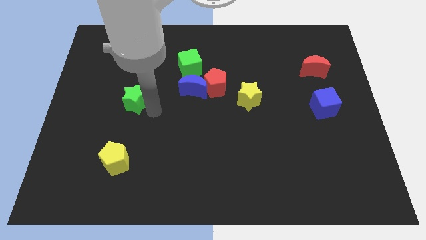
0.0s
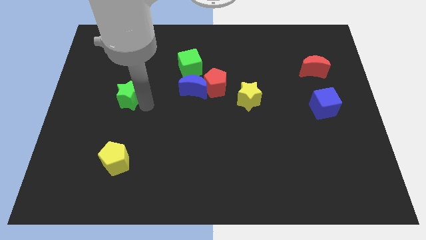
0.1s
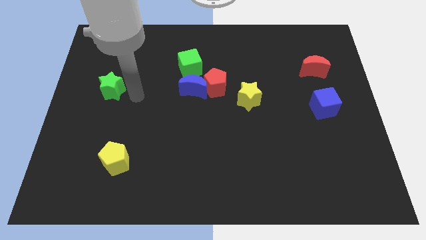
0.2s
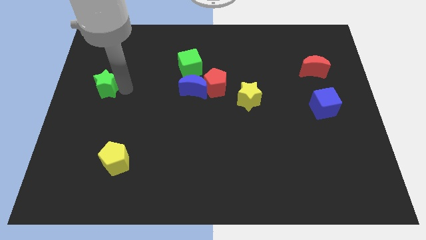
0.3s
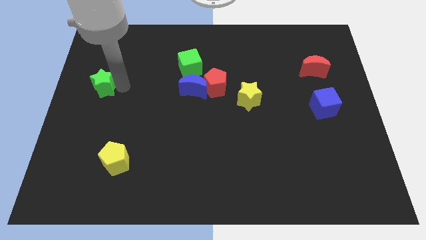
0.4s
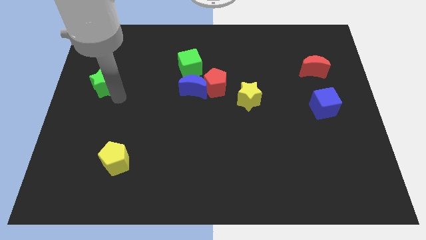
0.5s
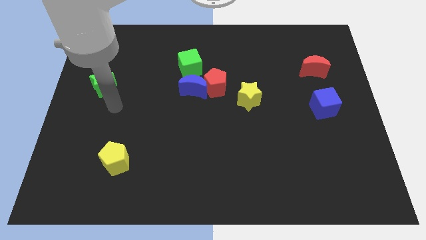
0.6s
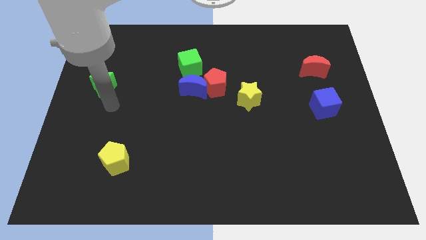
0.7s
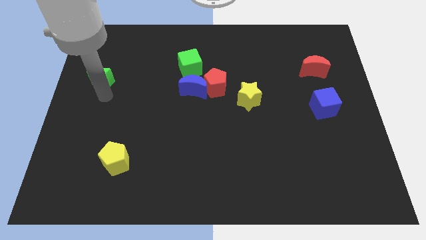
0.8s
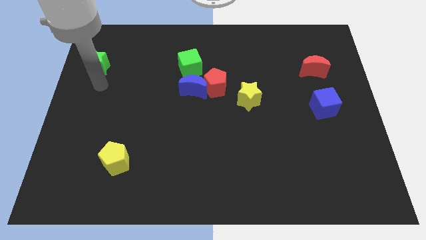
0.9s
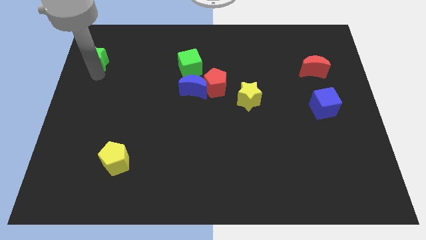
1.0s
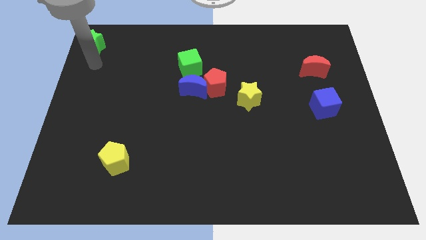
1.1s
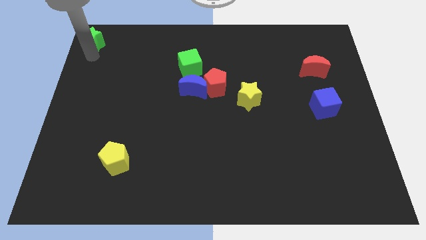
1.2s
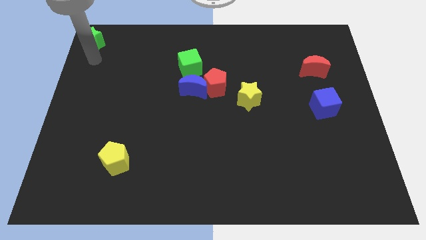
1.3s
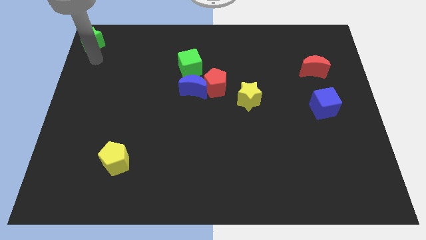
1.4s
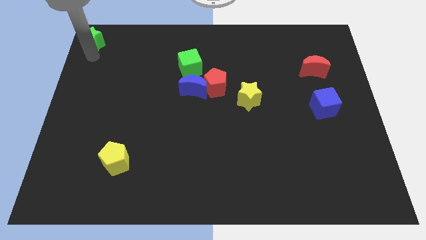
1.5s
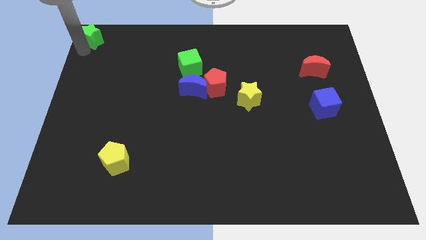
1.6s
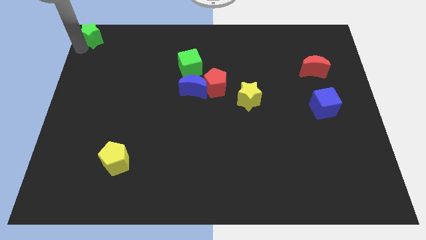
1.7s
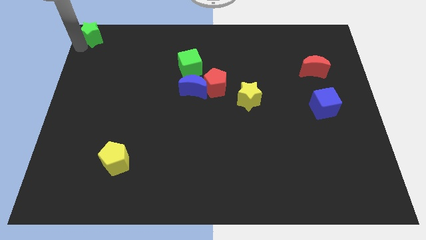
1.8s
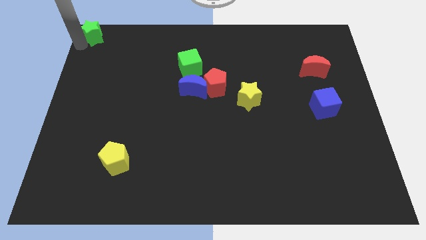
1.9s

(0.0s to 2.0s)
place the green star at top left corner of the board

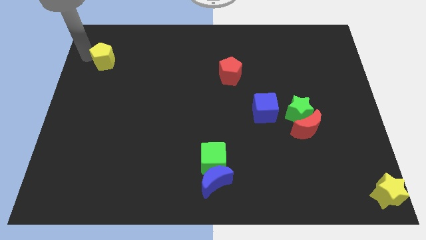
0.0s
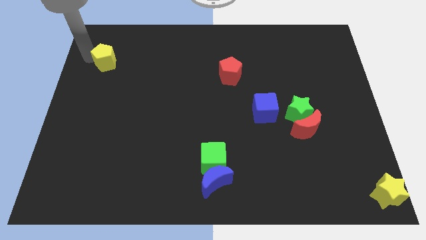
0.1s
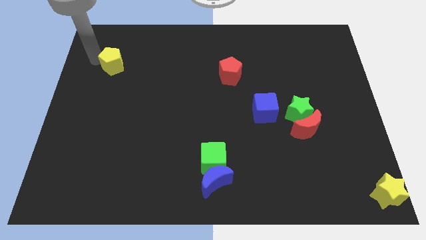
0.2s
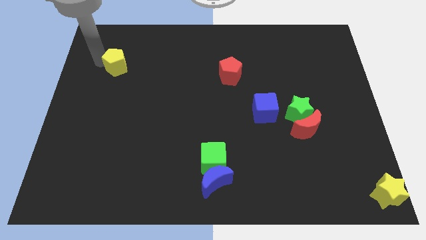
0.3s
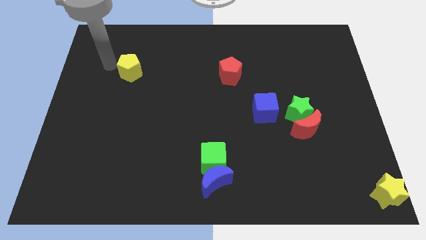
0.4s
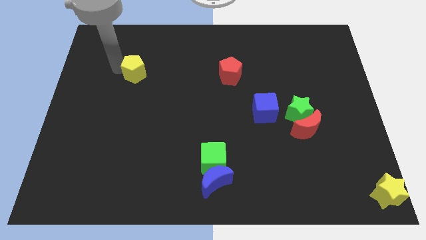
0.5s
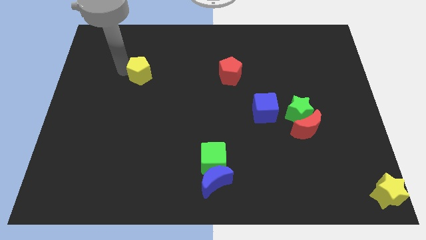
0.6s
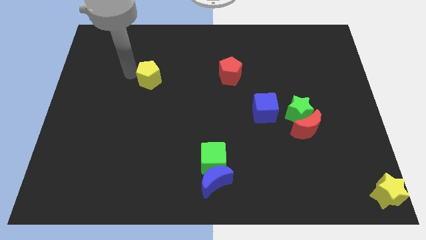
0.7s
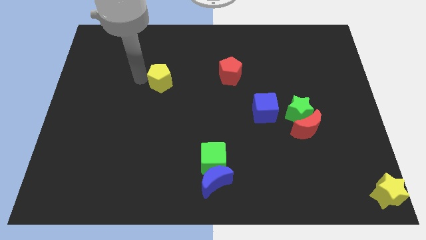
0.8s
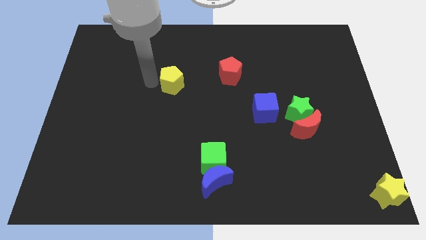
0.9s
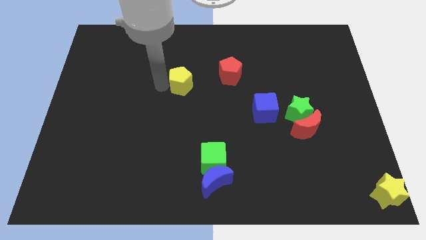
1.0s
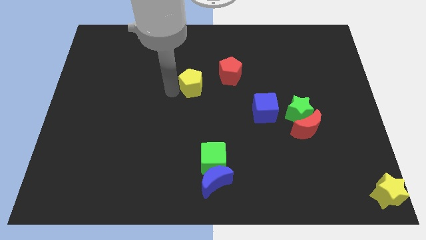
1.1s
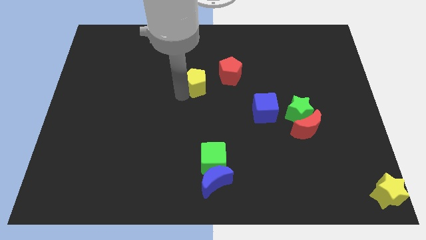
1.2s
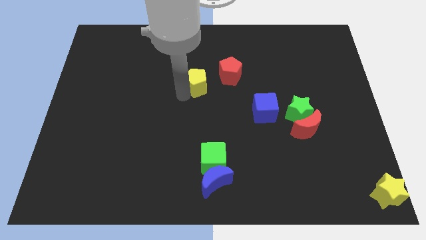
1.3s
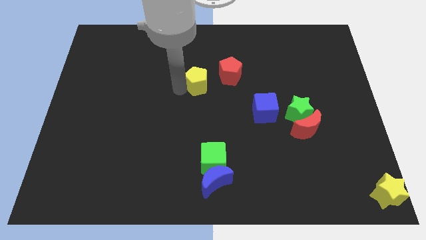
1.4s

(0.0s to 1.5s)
drag the yellow pentagon slightly towards right

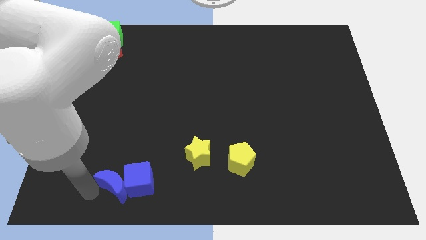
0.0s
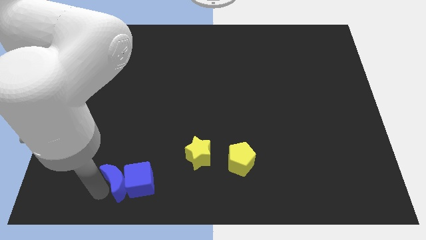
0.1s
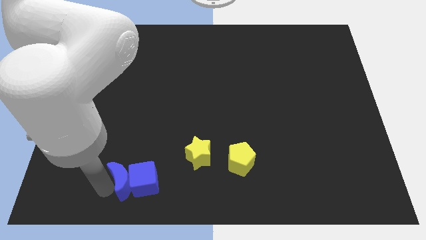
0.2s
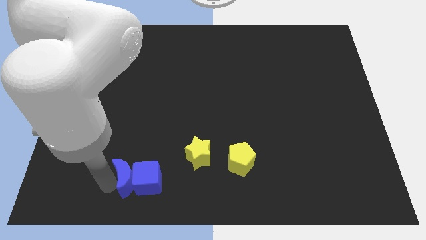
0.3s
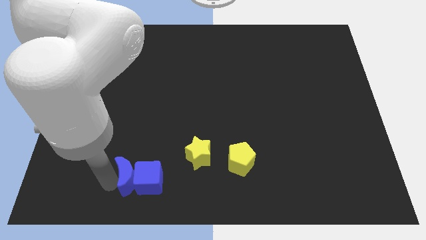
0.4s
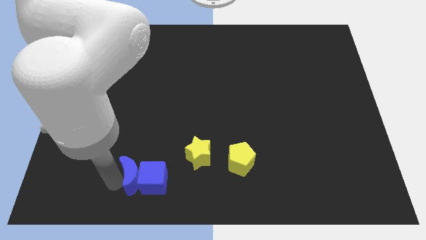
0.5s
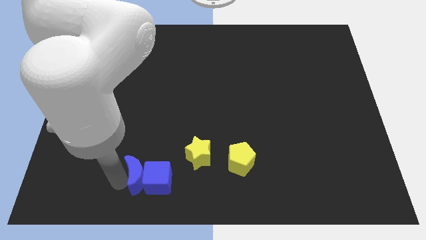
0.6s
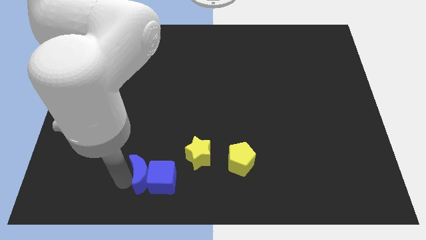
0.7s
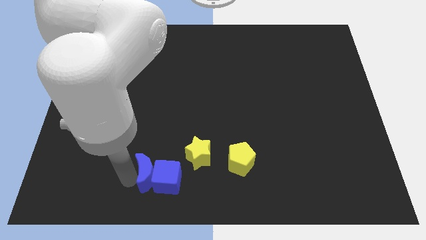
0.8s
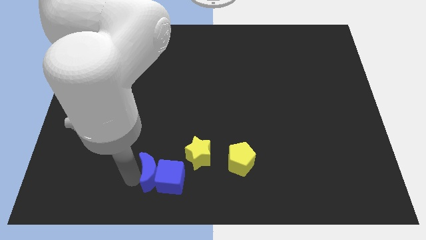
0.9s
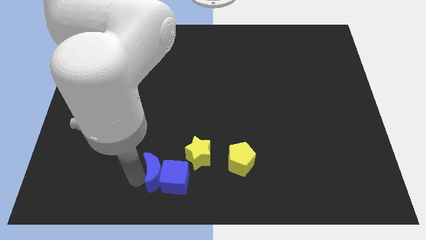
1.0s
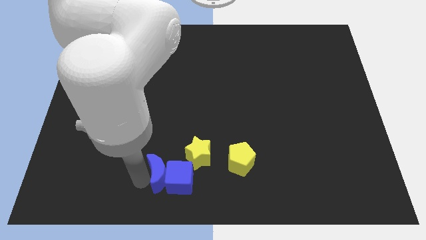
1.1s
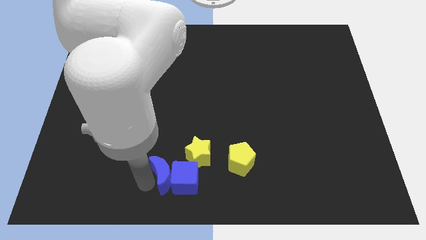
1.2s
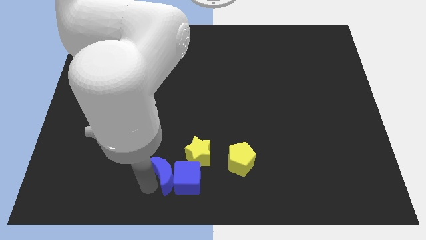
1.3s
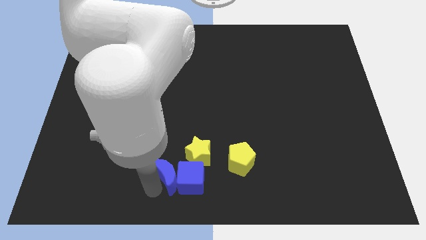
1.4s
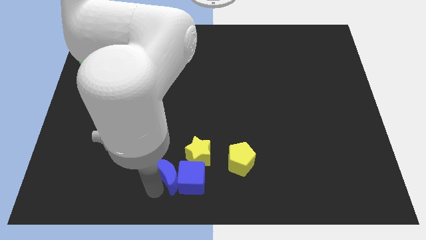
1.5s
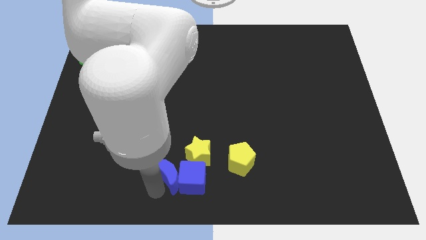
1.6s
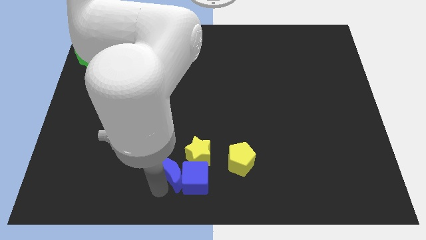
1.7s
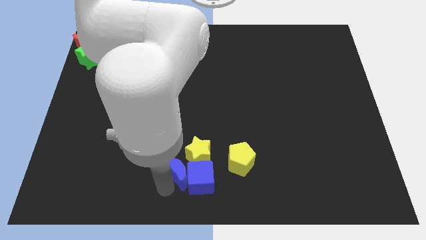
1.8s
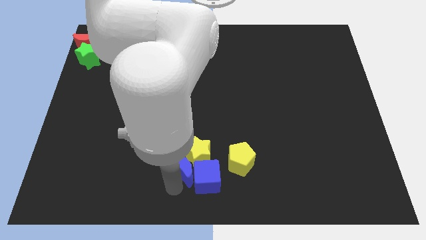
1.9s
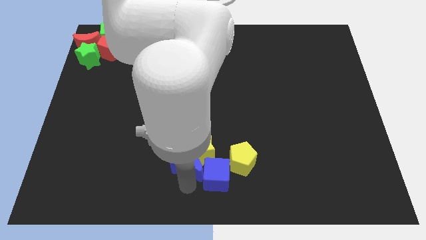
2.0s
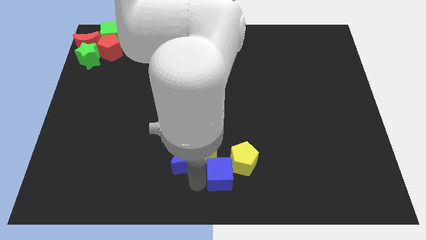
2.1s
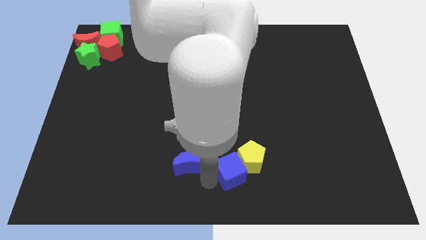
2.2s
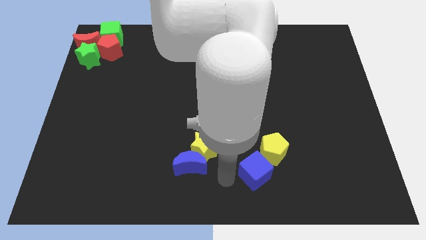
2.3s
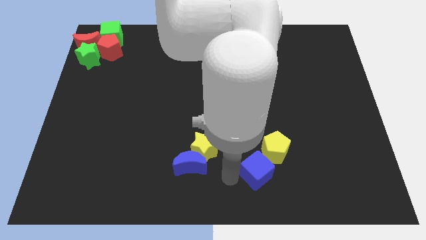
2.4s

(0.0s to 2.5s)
push the blue cube and yellow pentagon away from the yellow star and blue moon

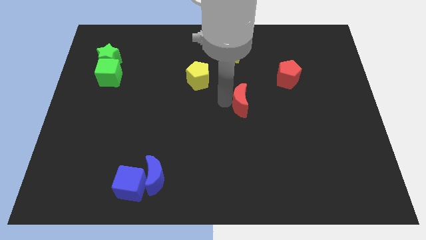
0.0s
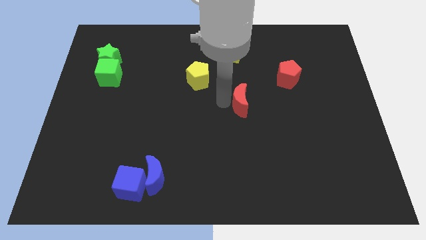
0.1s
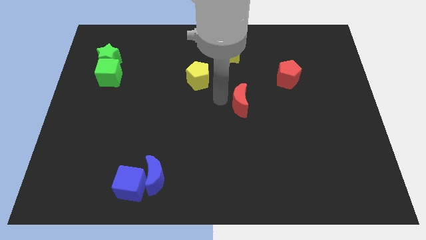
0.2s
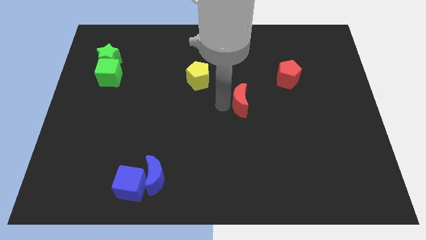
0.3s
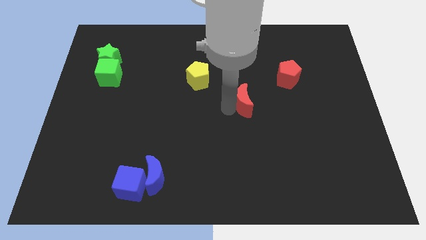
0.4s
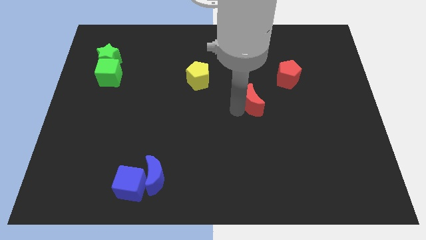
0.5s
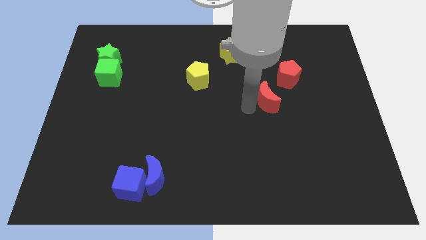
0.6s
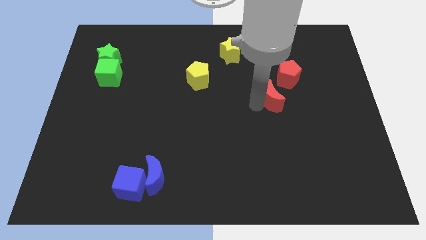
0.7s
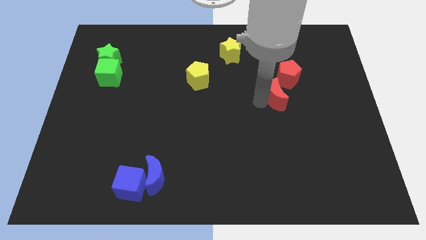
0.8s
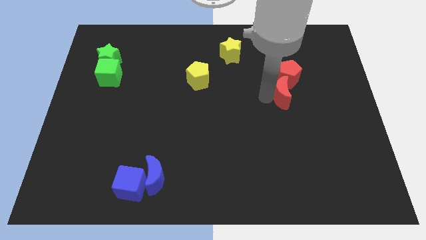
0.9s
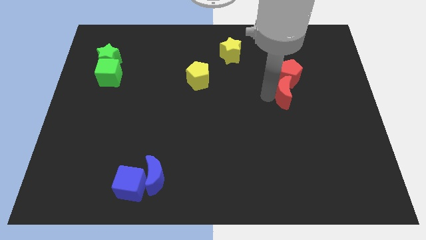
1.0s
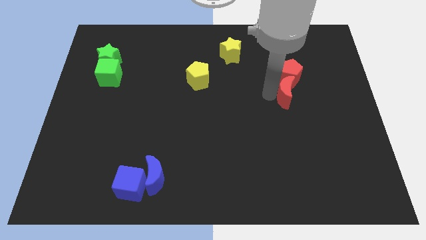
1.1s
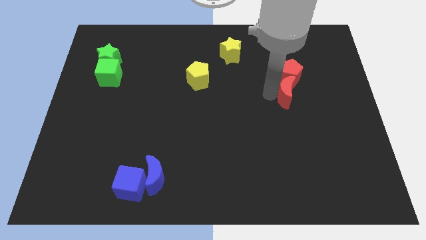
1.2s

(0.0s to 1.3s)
push the red crescent to the bottom of the red pentagon

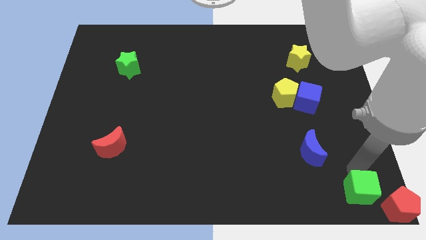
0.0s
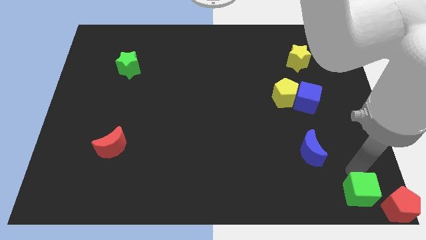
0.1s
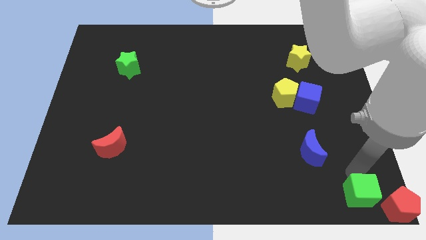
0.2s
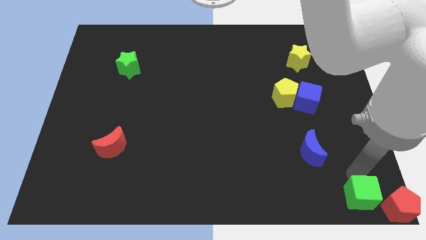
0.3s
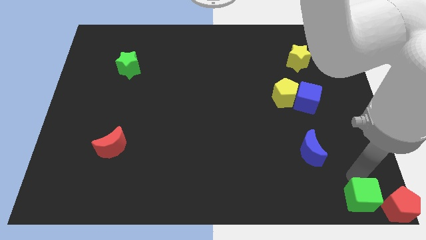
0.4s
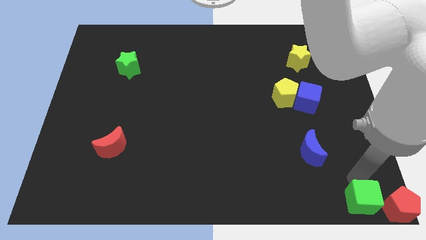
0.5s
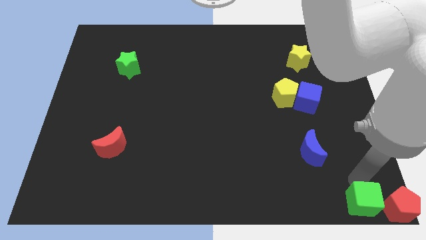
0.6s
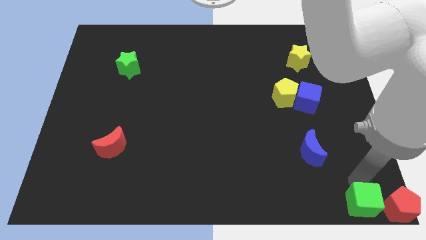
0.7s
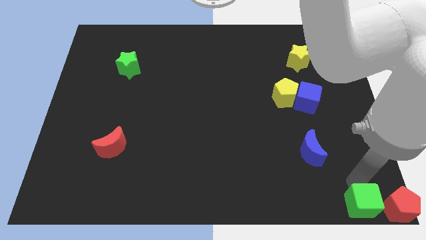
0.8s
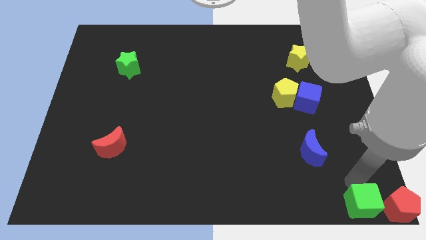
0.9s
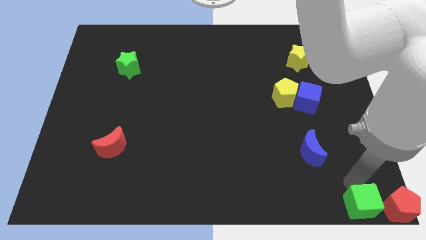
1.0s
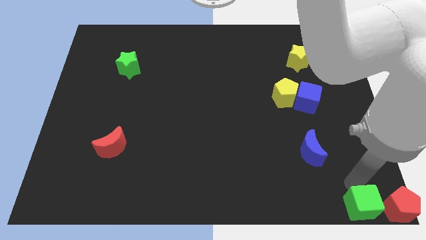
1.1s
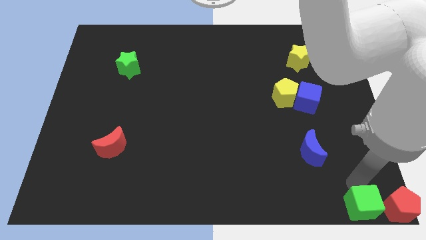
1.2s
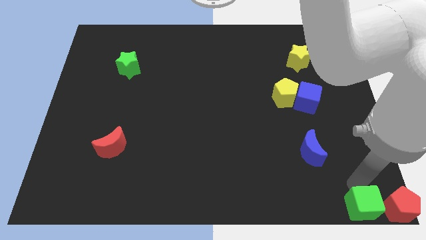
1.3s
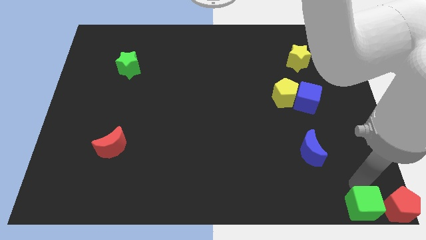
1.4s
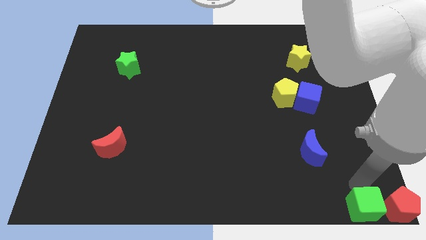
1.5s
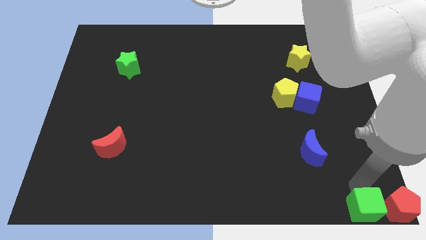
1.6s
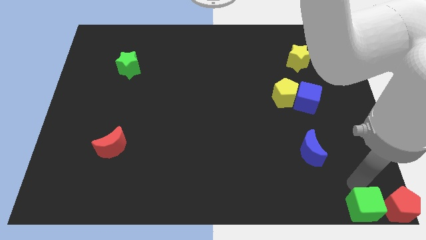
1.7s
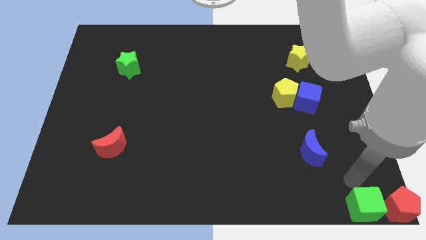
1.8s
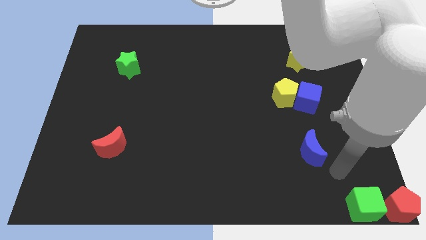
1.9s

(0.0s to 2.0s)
place the green cube to the left of the red pentagon
